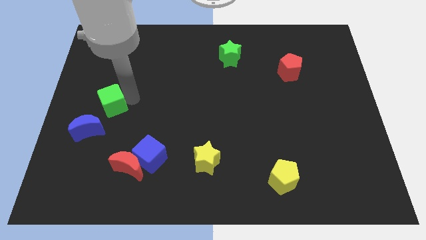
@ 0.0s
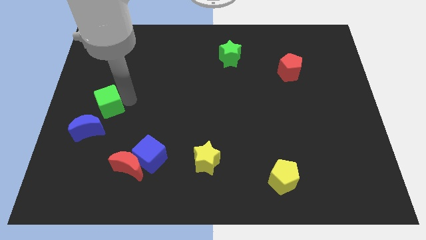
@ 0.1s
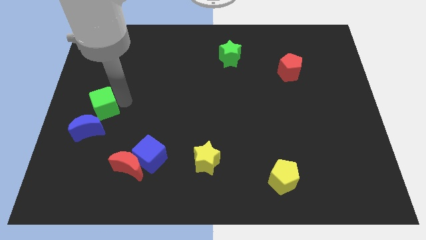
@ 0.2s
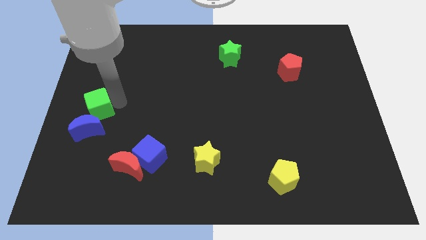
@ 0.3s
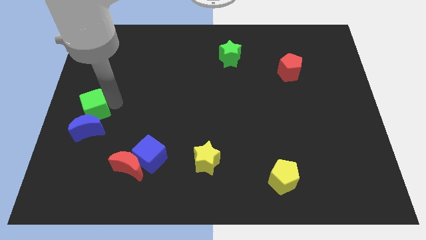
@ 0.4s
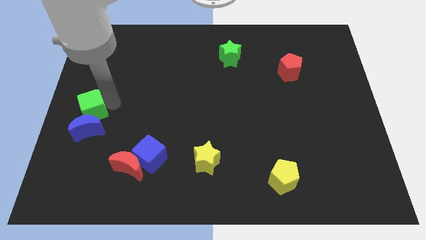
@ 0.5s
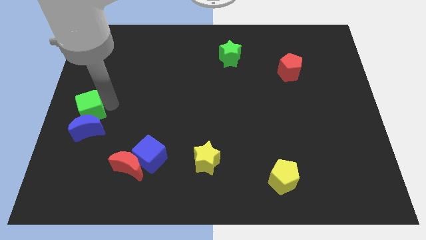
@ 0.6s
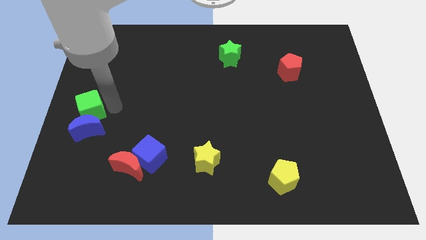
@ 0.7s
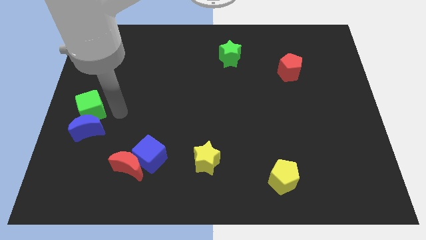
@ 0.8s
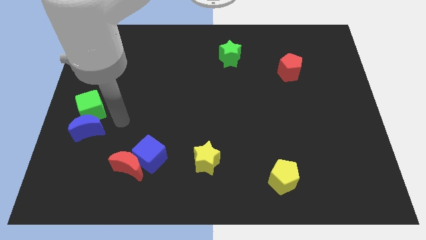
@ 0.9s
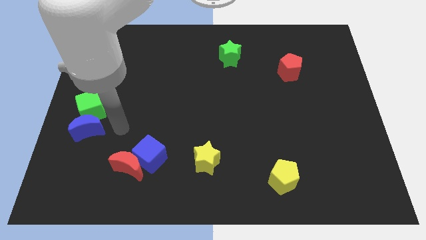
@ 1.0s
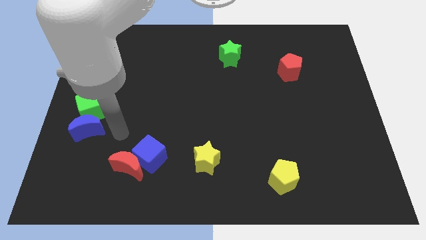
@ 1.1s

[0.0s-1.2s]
place the green cube above the blue crescent

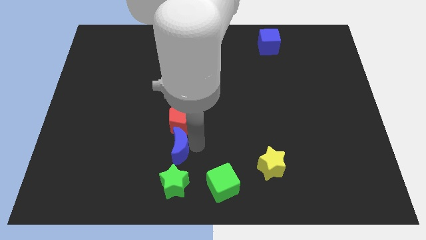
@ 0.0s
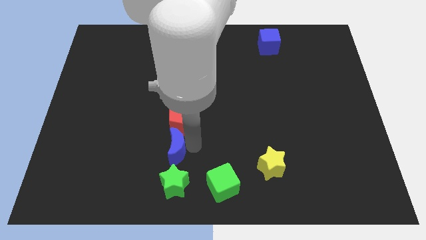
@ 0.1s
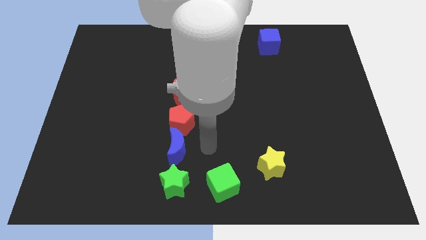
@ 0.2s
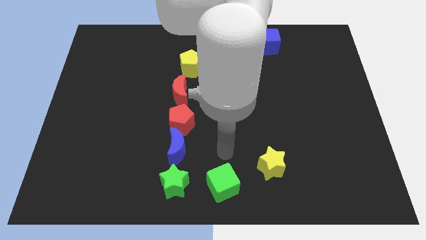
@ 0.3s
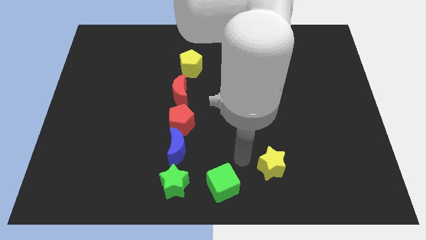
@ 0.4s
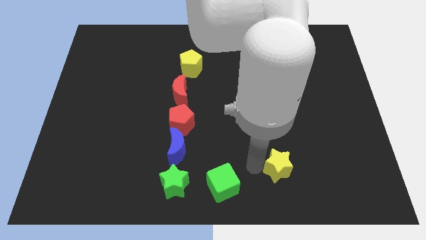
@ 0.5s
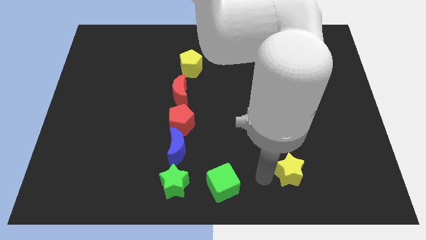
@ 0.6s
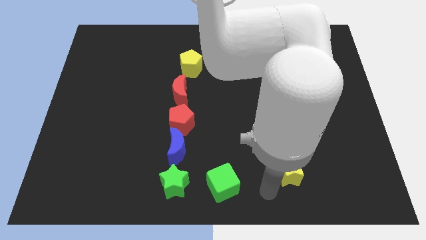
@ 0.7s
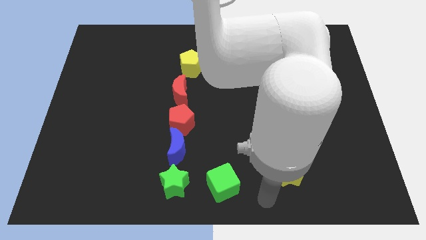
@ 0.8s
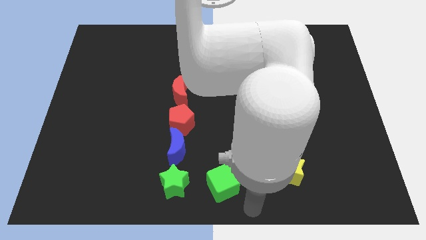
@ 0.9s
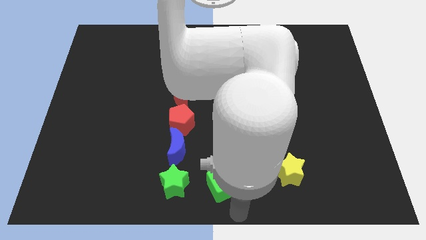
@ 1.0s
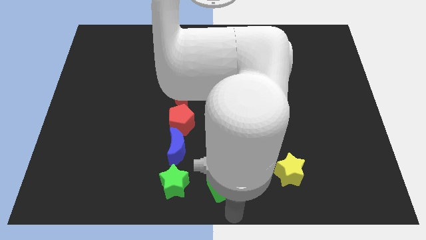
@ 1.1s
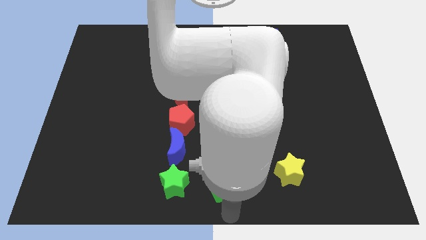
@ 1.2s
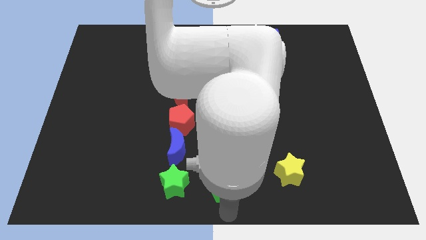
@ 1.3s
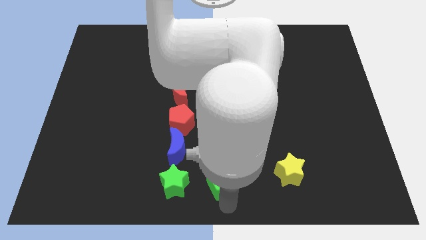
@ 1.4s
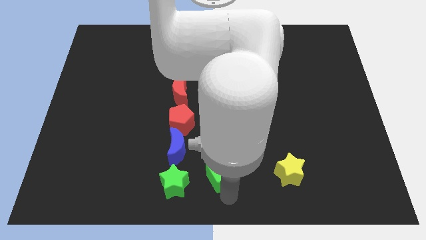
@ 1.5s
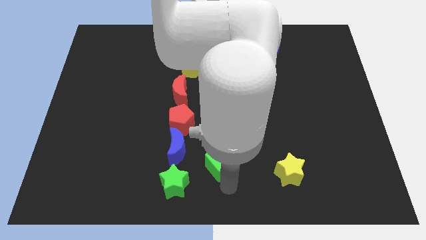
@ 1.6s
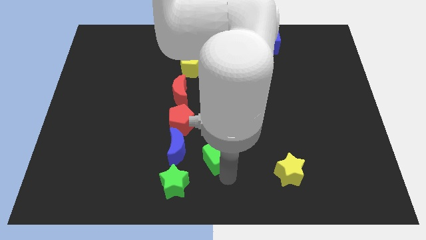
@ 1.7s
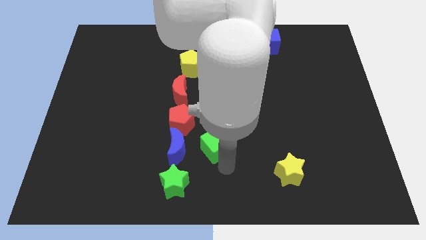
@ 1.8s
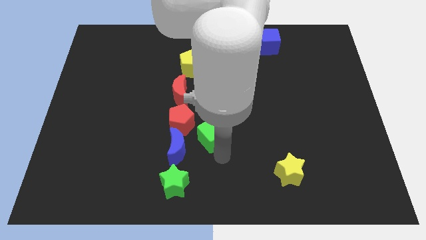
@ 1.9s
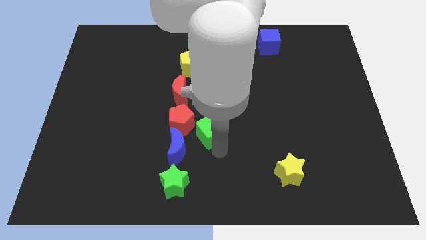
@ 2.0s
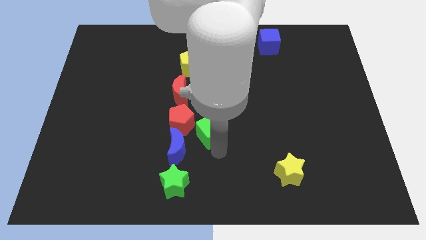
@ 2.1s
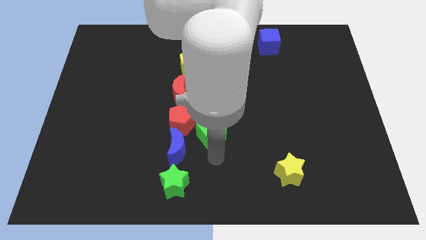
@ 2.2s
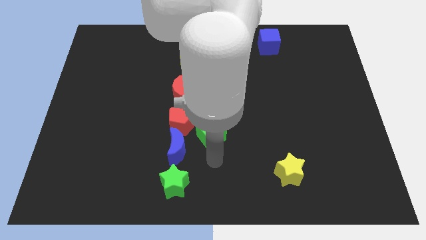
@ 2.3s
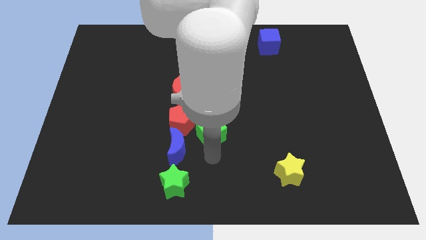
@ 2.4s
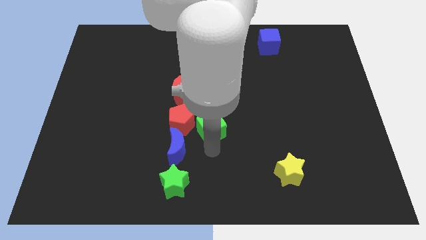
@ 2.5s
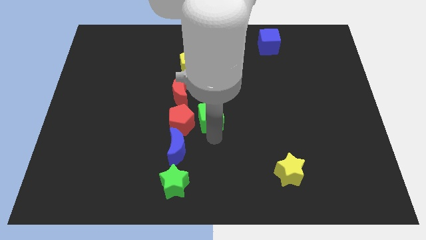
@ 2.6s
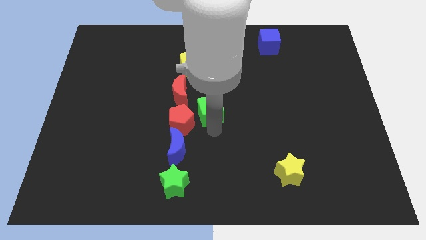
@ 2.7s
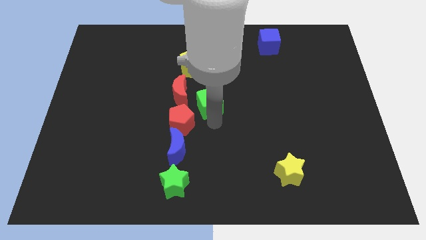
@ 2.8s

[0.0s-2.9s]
place green cube to the right of red pentagon

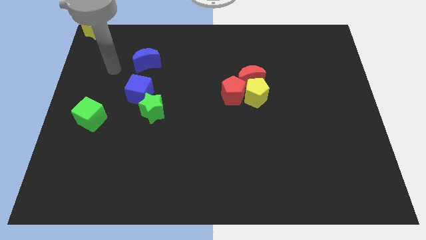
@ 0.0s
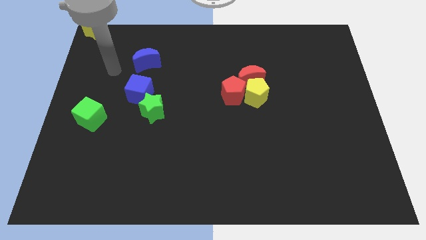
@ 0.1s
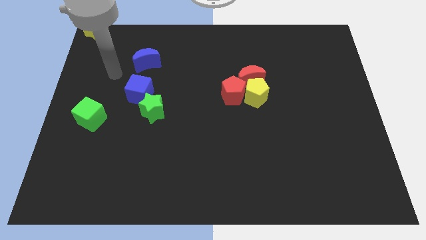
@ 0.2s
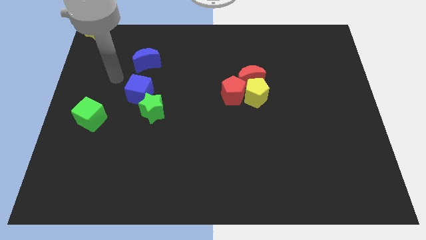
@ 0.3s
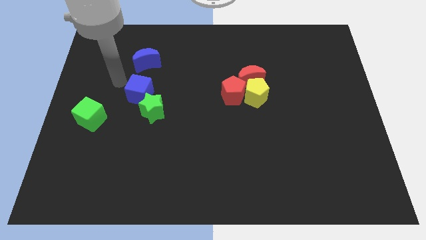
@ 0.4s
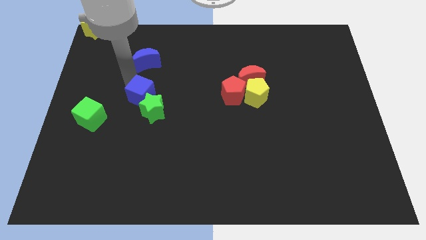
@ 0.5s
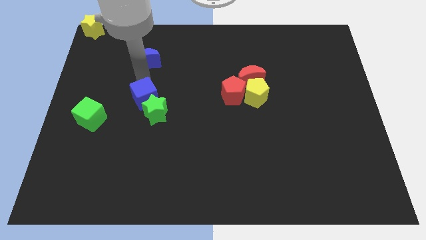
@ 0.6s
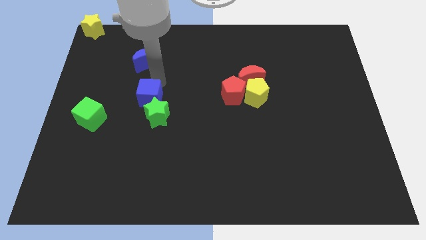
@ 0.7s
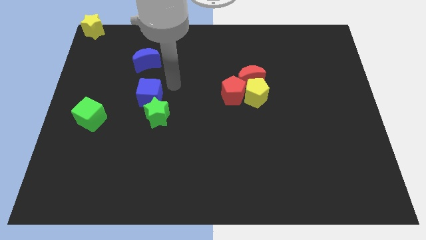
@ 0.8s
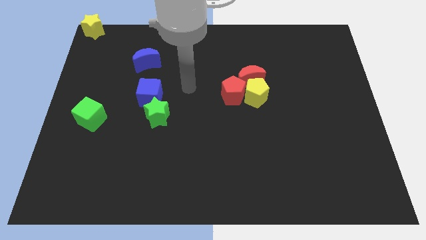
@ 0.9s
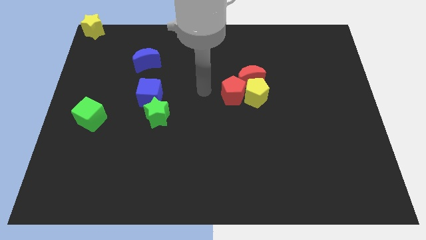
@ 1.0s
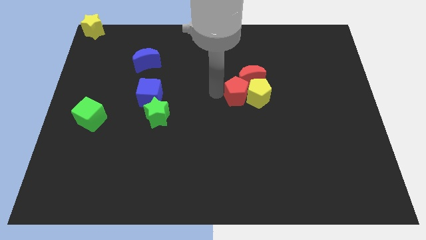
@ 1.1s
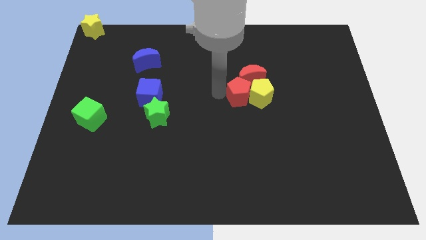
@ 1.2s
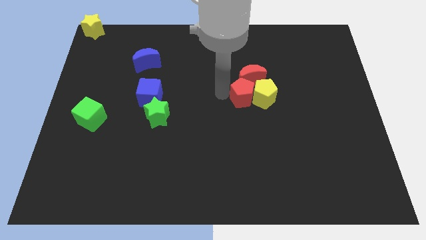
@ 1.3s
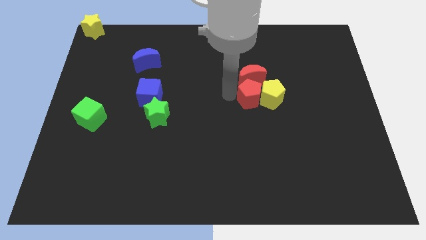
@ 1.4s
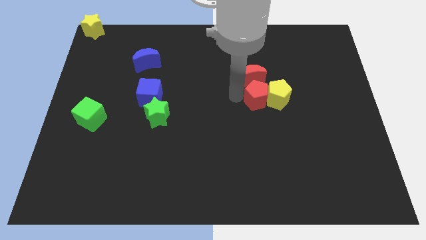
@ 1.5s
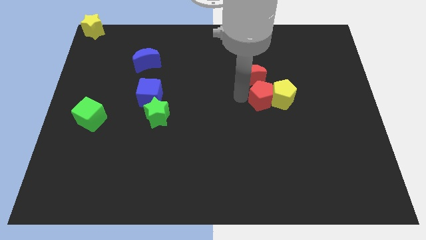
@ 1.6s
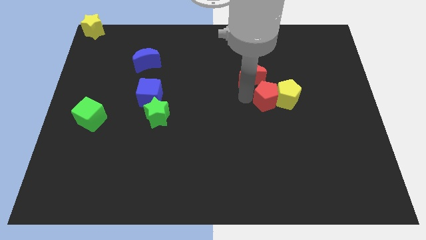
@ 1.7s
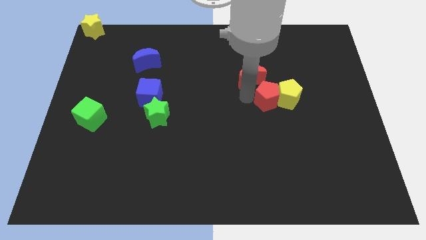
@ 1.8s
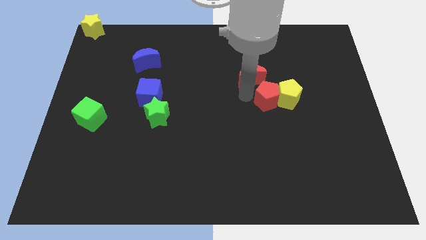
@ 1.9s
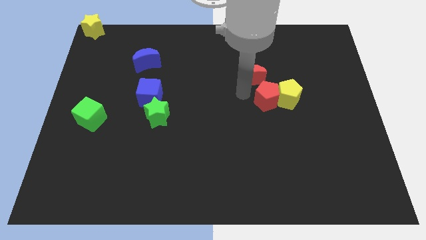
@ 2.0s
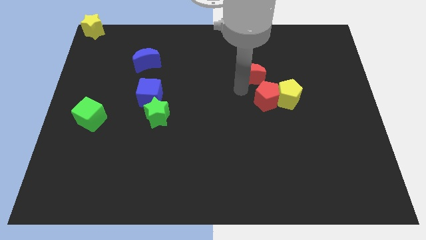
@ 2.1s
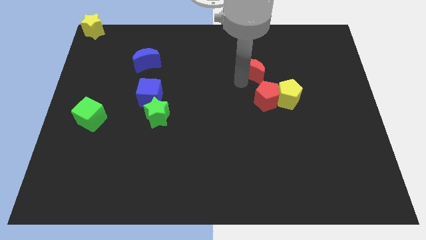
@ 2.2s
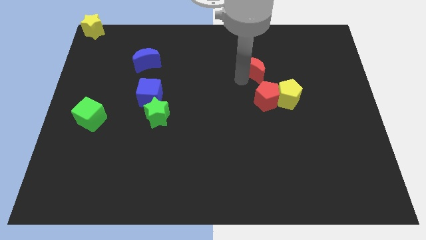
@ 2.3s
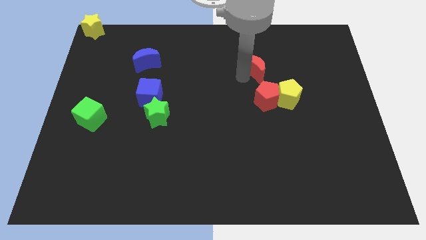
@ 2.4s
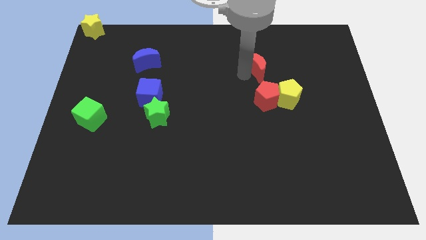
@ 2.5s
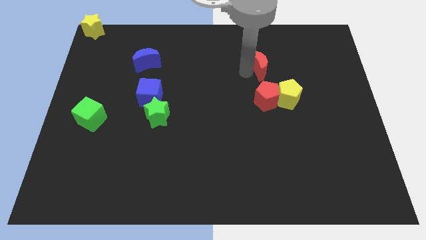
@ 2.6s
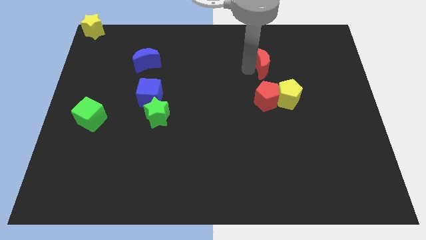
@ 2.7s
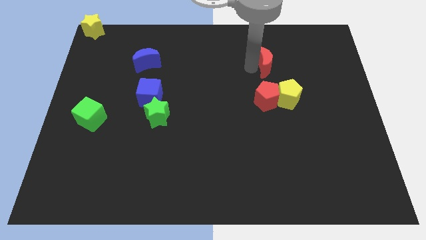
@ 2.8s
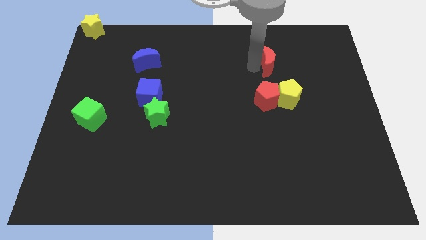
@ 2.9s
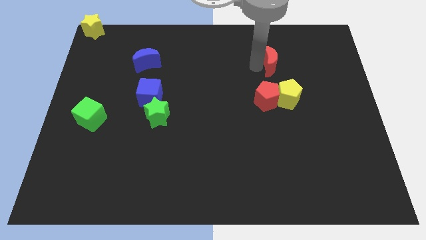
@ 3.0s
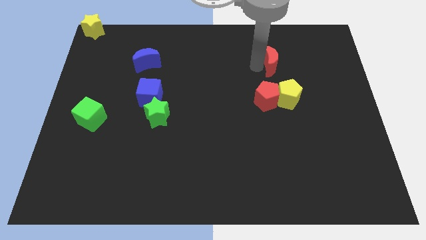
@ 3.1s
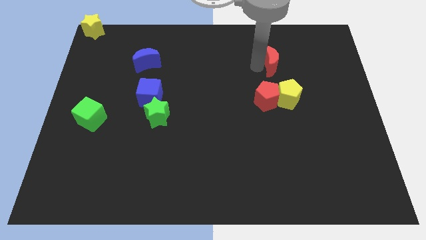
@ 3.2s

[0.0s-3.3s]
push the red pentagon into the yellow pentagon

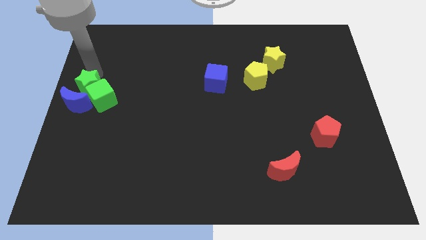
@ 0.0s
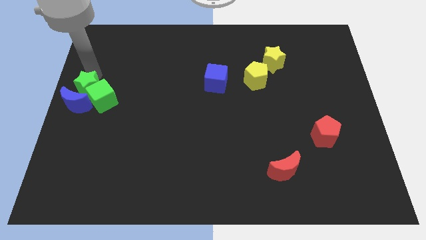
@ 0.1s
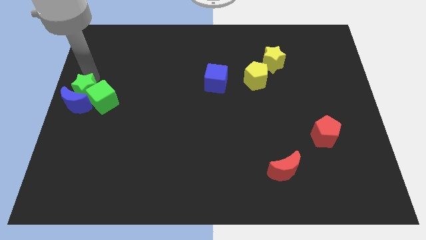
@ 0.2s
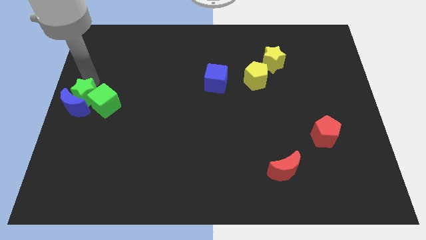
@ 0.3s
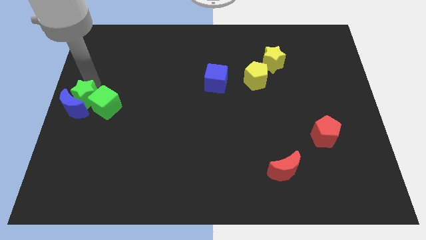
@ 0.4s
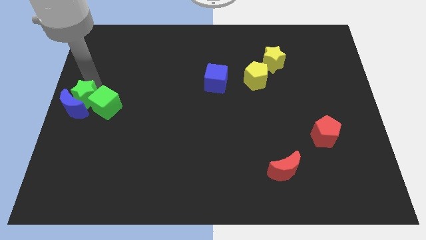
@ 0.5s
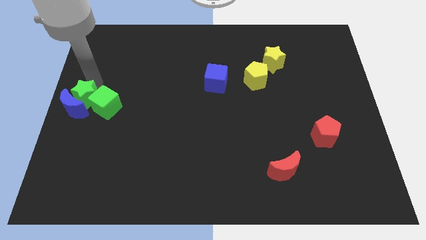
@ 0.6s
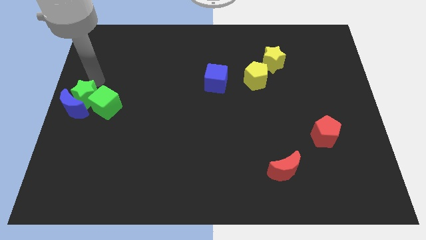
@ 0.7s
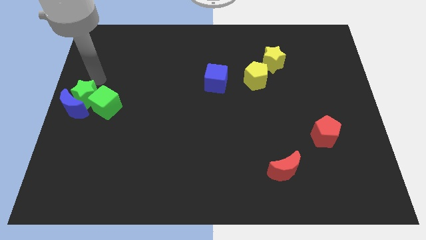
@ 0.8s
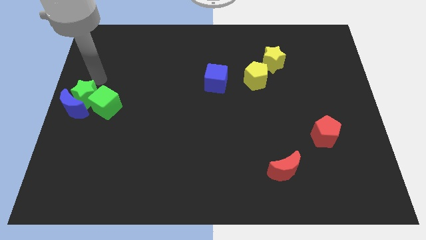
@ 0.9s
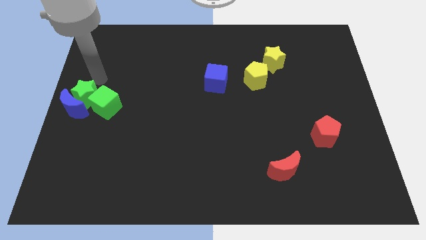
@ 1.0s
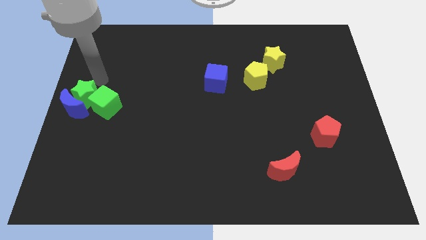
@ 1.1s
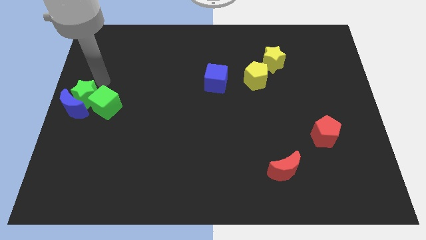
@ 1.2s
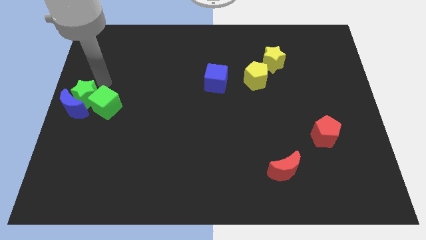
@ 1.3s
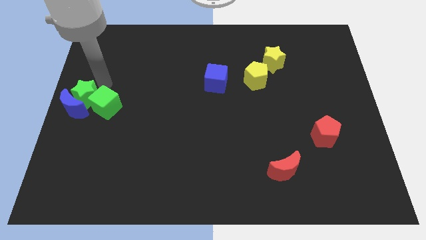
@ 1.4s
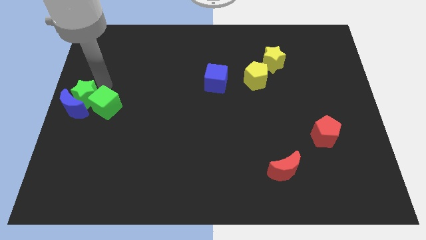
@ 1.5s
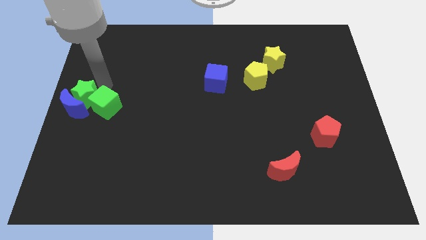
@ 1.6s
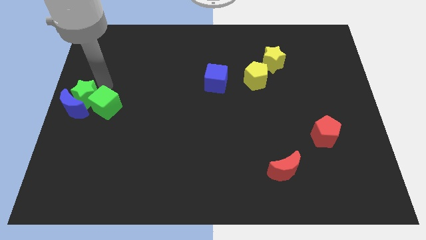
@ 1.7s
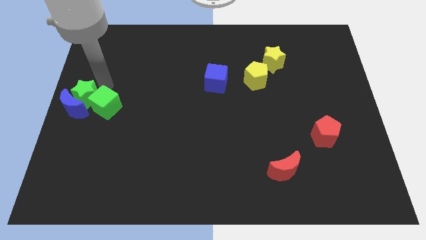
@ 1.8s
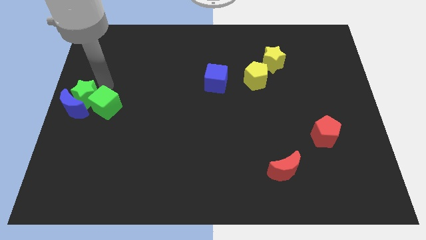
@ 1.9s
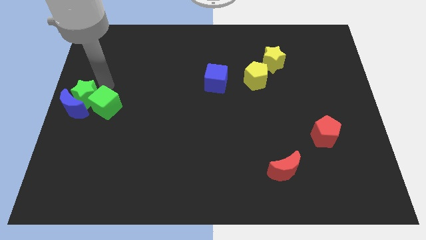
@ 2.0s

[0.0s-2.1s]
push the green star into the blue moon
